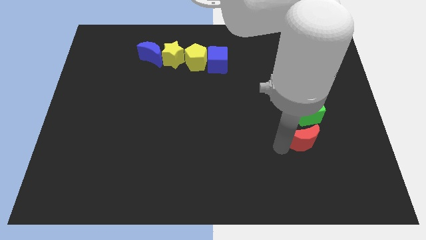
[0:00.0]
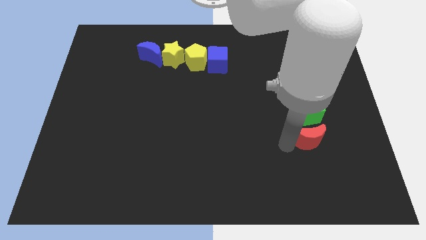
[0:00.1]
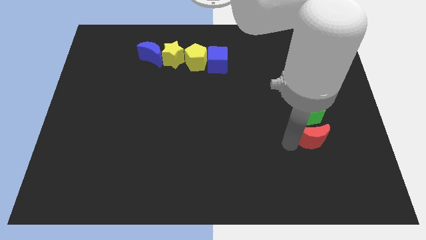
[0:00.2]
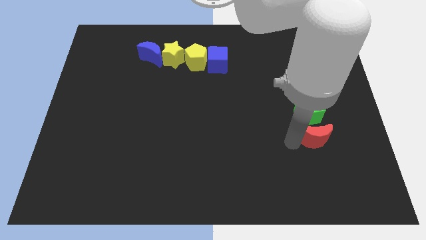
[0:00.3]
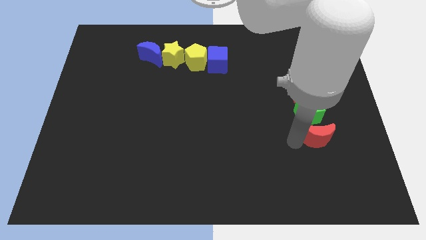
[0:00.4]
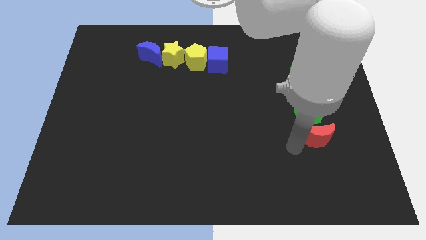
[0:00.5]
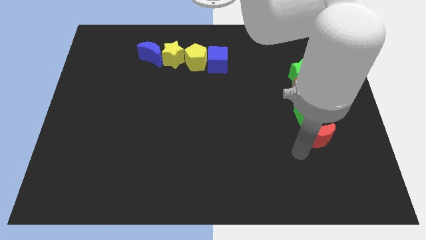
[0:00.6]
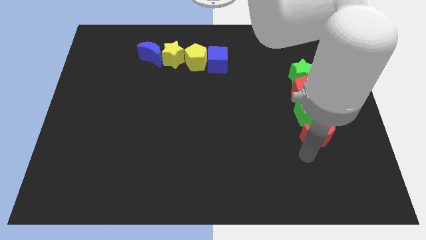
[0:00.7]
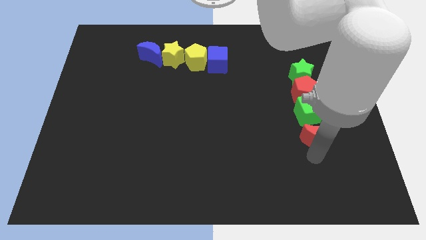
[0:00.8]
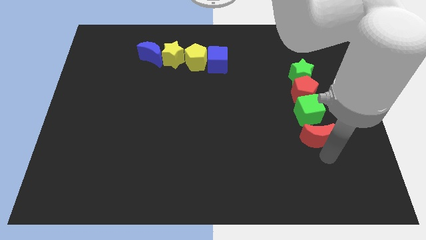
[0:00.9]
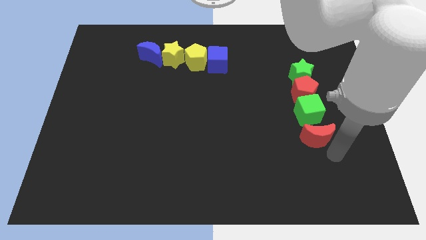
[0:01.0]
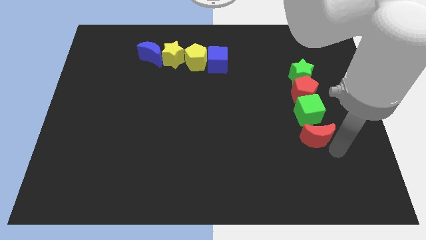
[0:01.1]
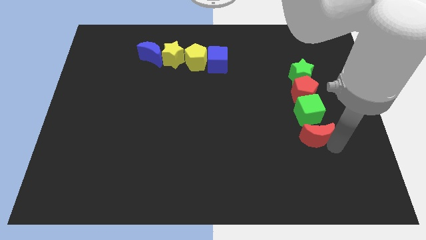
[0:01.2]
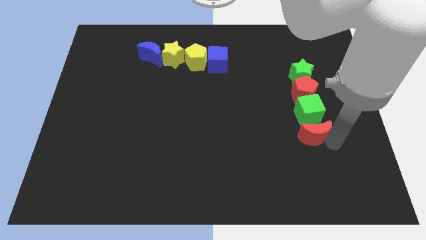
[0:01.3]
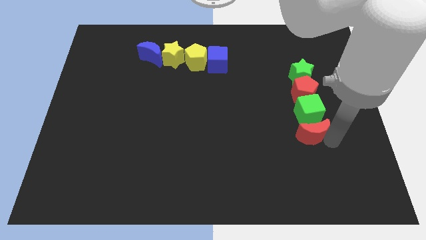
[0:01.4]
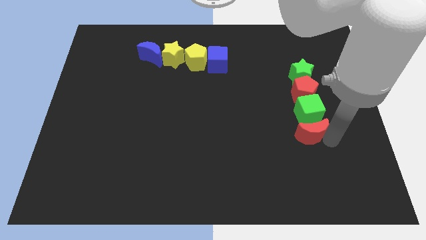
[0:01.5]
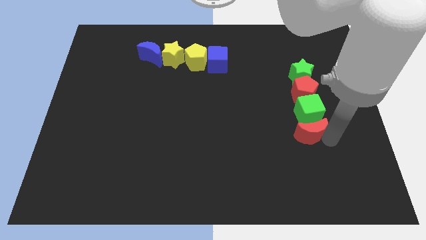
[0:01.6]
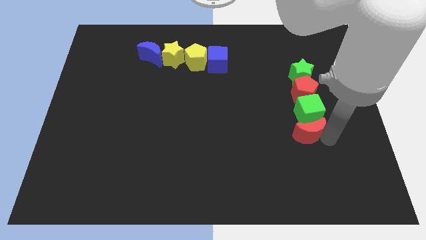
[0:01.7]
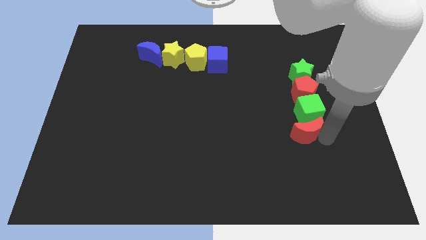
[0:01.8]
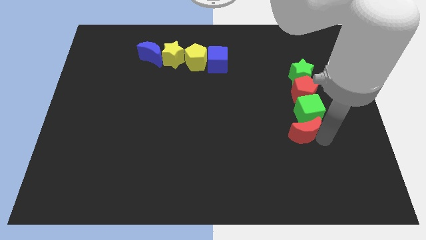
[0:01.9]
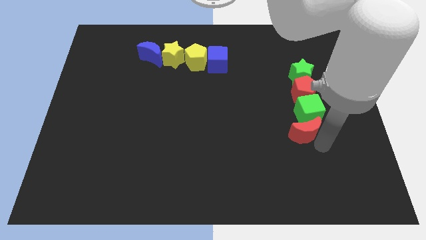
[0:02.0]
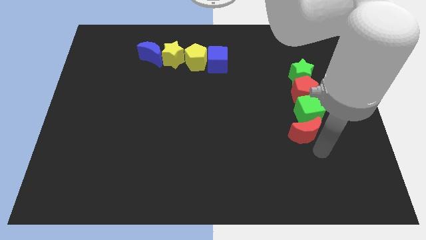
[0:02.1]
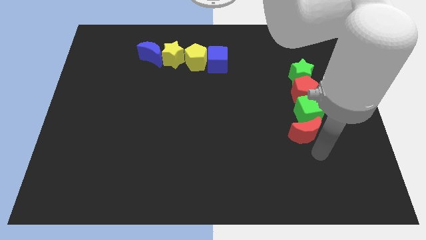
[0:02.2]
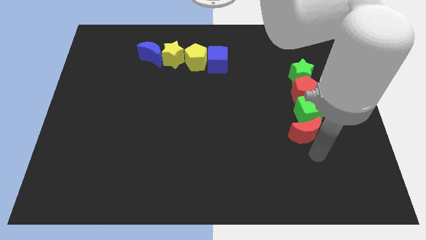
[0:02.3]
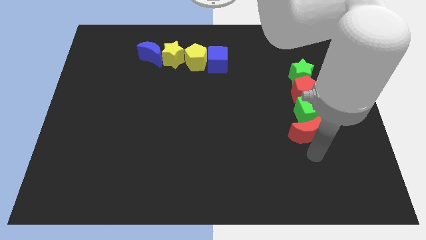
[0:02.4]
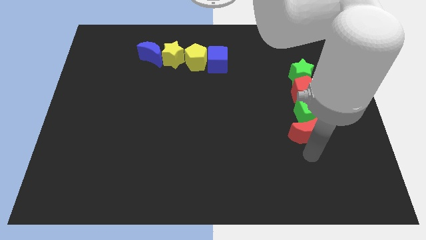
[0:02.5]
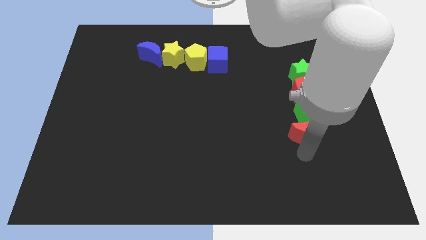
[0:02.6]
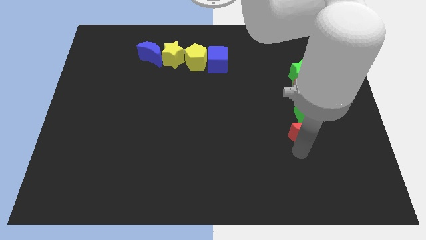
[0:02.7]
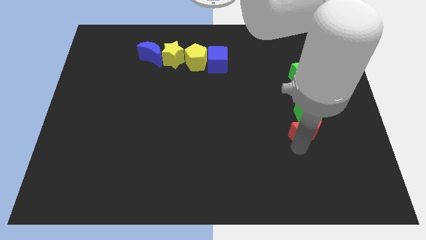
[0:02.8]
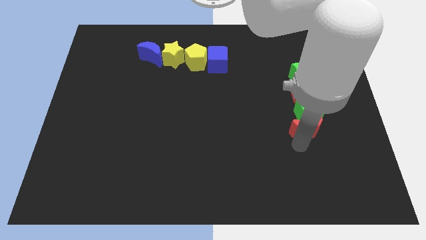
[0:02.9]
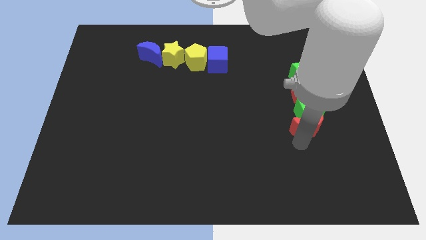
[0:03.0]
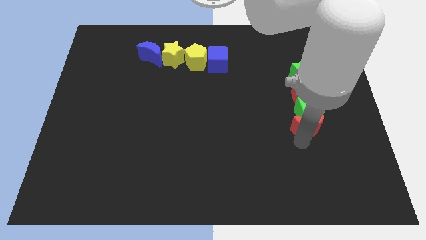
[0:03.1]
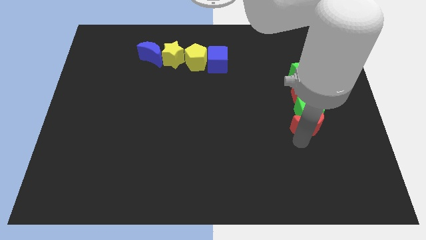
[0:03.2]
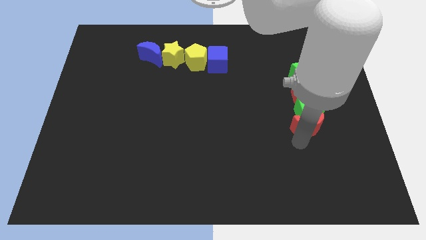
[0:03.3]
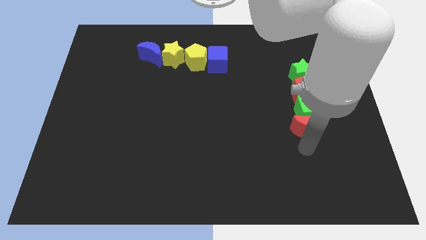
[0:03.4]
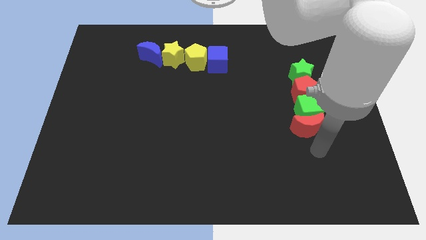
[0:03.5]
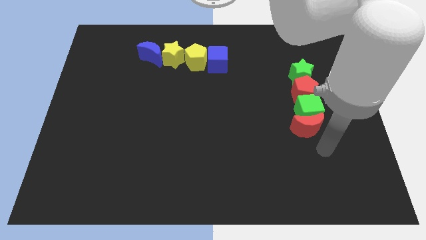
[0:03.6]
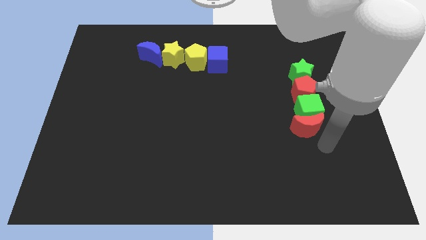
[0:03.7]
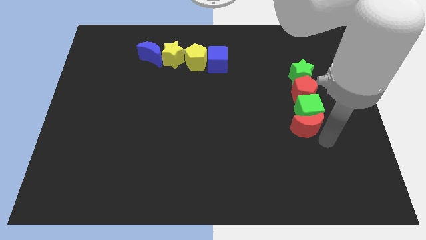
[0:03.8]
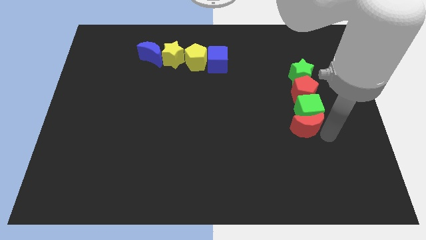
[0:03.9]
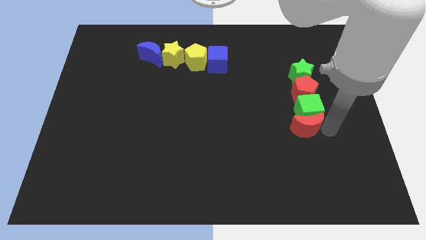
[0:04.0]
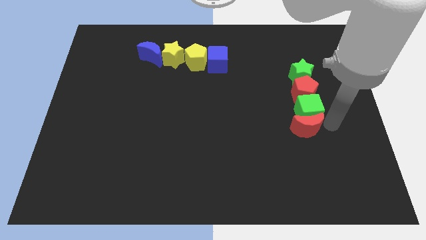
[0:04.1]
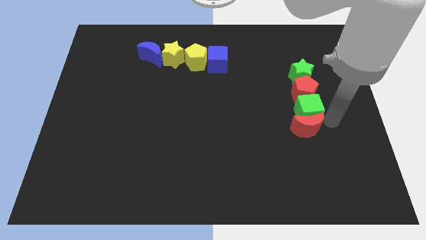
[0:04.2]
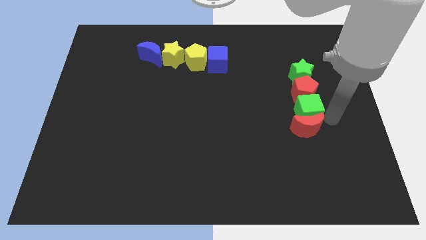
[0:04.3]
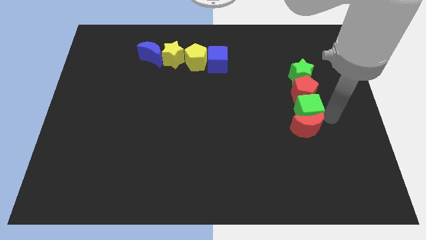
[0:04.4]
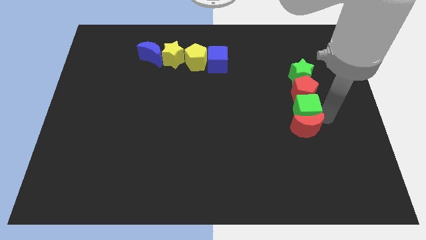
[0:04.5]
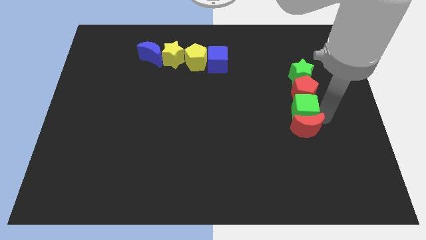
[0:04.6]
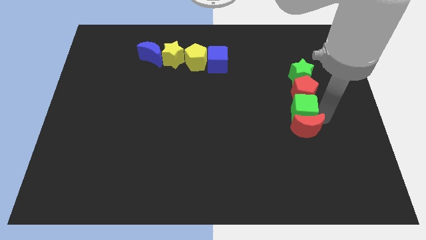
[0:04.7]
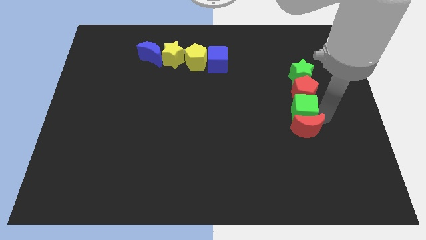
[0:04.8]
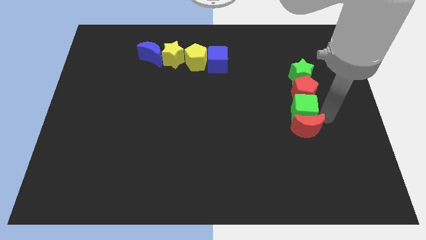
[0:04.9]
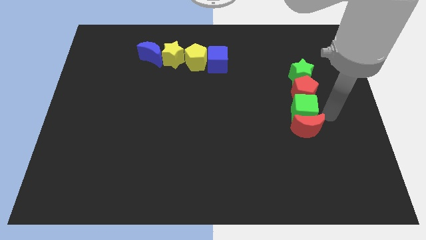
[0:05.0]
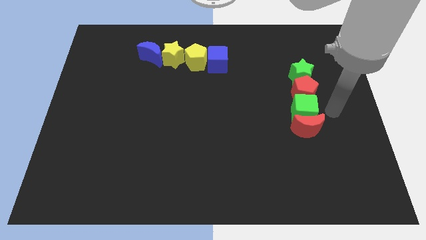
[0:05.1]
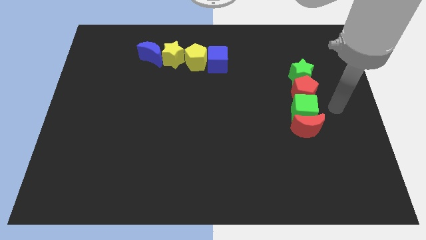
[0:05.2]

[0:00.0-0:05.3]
push the red crescent into the green cube

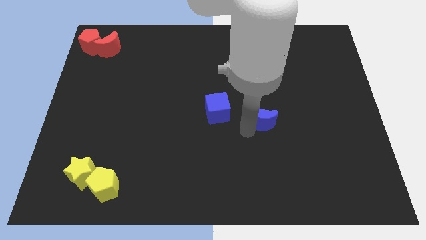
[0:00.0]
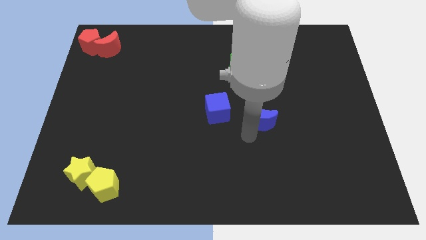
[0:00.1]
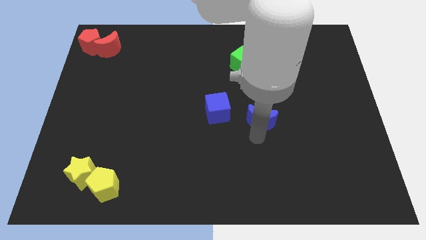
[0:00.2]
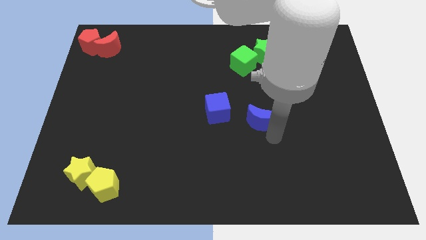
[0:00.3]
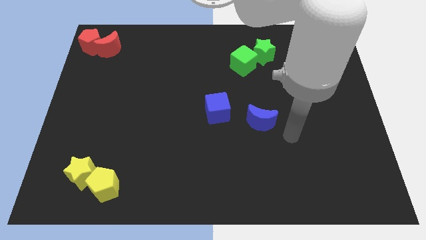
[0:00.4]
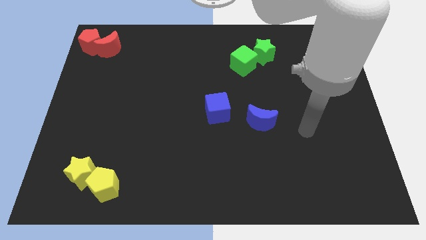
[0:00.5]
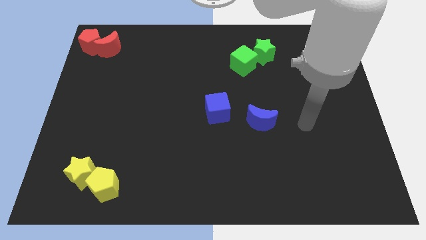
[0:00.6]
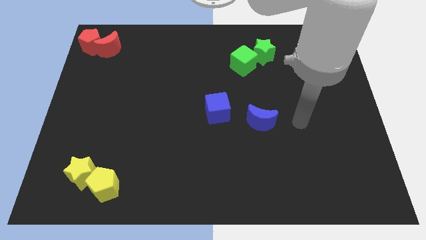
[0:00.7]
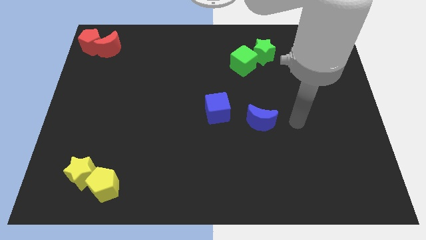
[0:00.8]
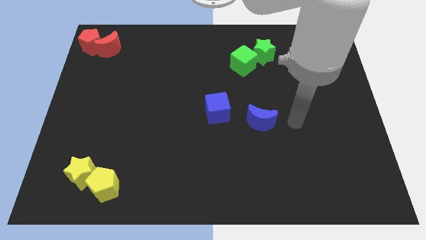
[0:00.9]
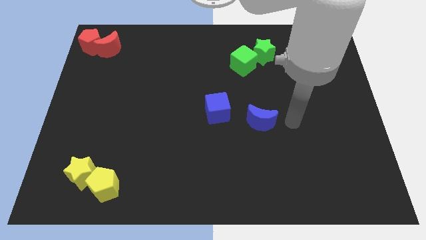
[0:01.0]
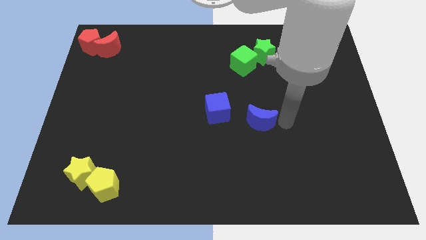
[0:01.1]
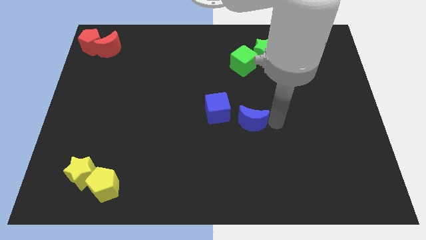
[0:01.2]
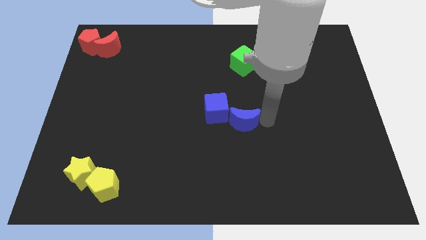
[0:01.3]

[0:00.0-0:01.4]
push the blue crescent into the blue moon

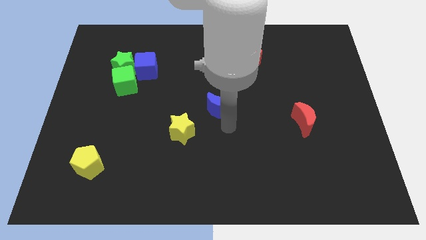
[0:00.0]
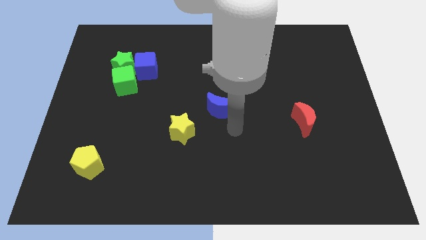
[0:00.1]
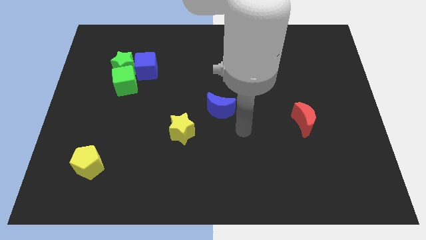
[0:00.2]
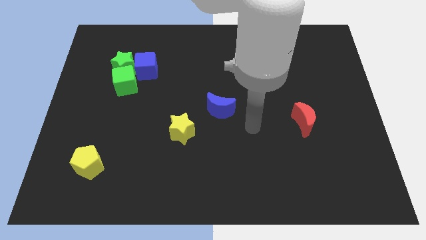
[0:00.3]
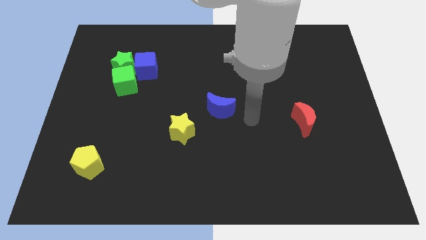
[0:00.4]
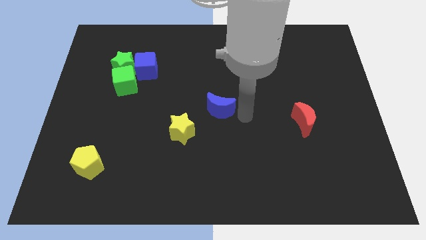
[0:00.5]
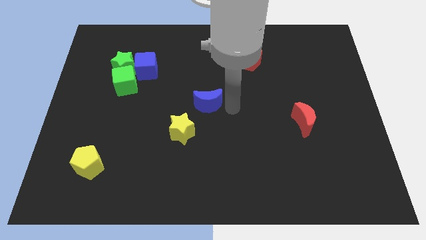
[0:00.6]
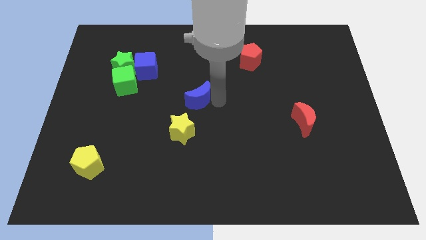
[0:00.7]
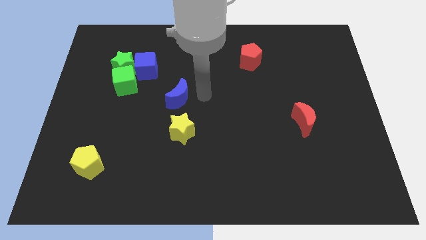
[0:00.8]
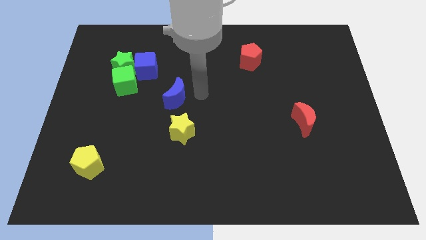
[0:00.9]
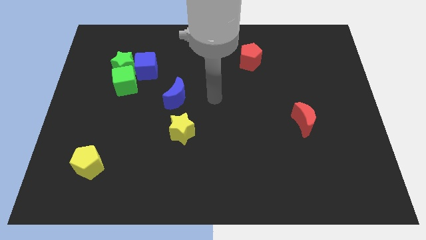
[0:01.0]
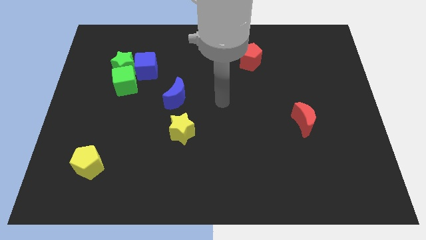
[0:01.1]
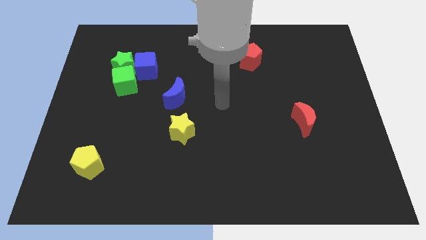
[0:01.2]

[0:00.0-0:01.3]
move the blue moon above the yellow star

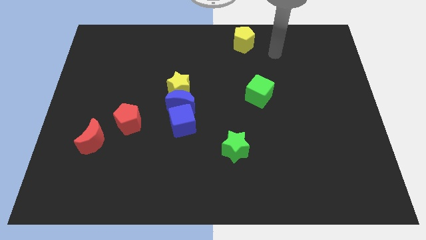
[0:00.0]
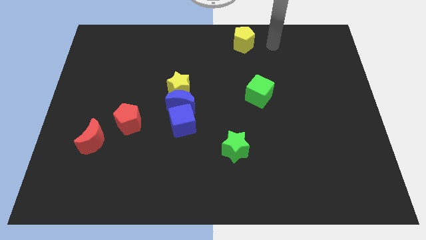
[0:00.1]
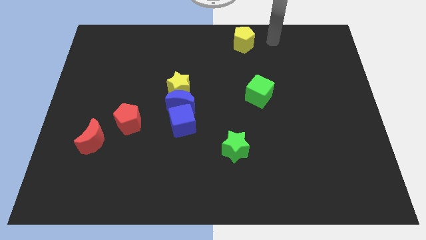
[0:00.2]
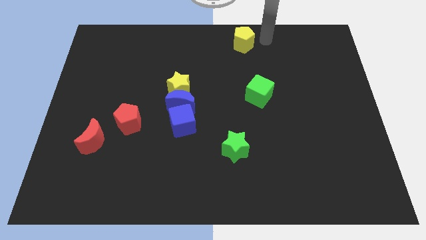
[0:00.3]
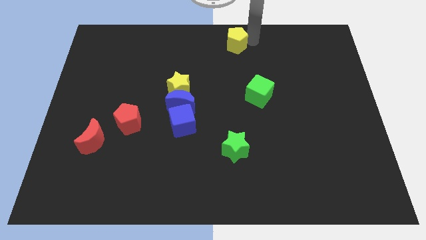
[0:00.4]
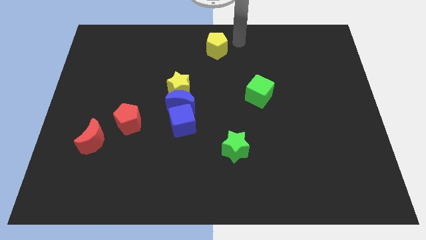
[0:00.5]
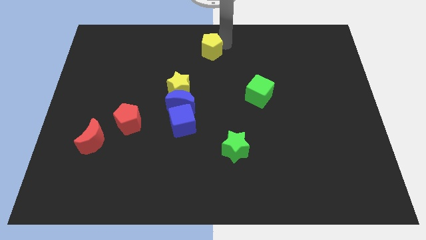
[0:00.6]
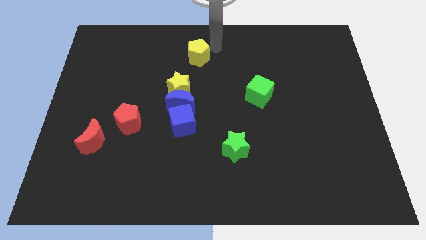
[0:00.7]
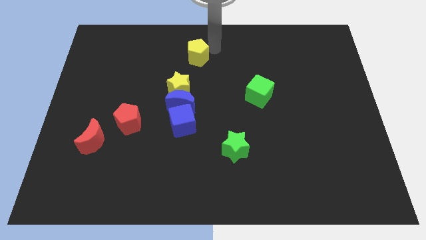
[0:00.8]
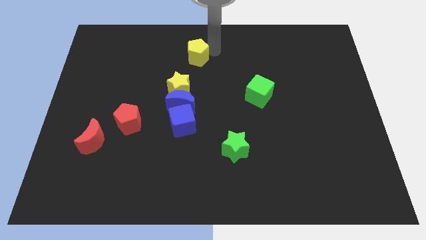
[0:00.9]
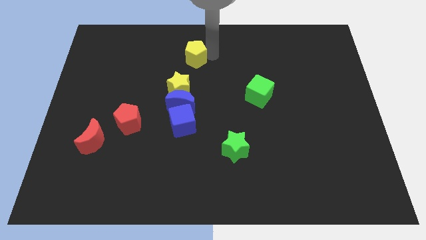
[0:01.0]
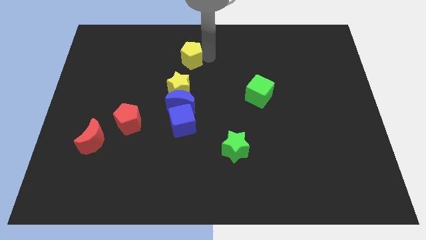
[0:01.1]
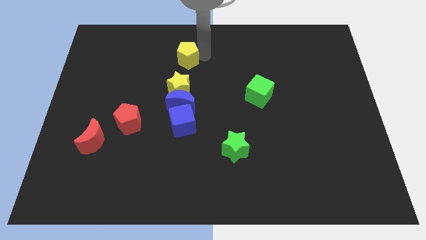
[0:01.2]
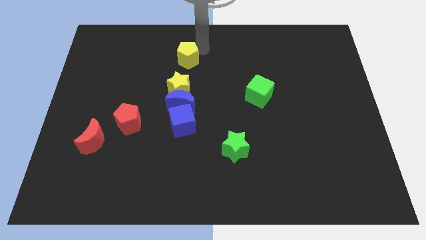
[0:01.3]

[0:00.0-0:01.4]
push the yellow pentagon towards the left side of the board
